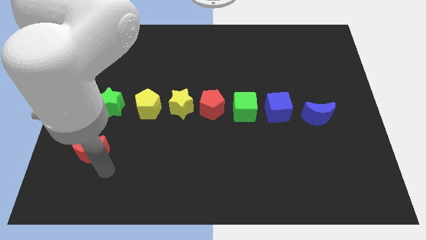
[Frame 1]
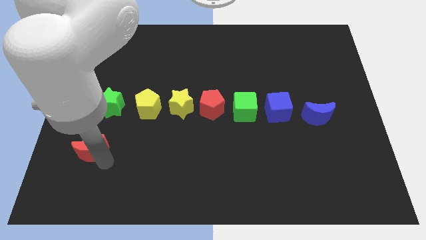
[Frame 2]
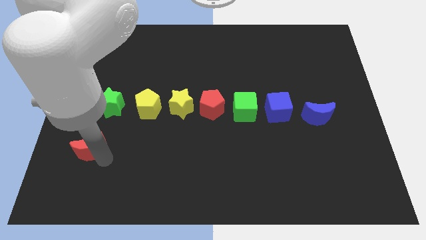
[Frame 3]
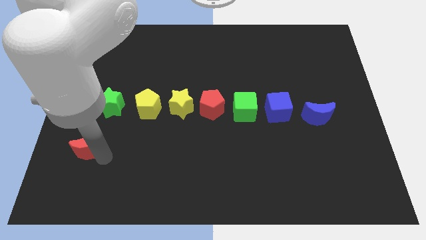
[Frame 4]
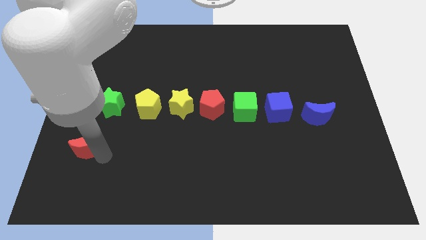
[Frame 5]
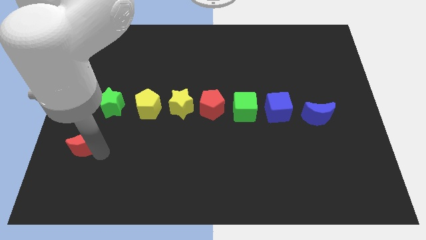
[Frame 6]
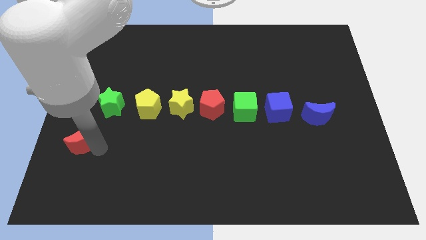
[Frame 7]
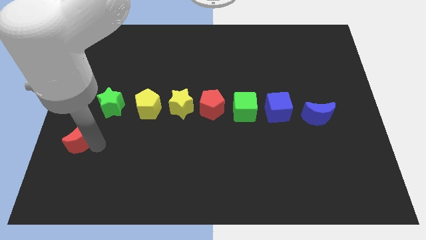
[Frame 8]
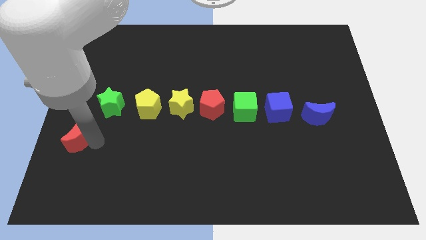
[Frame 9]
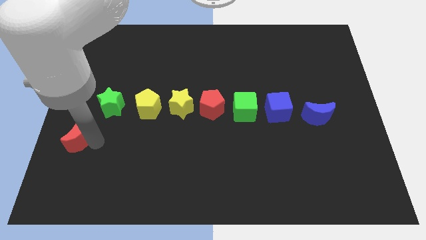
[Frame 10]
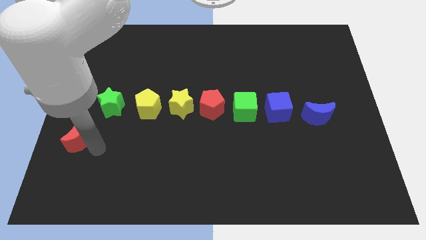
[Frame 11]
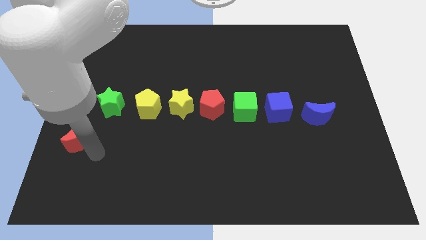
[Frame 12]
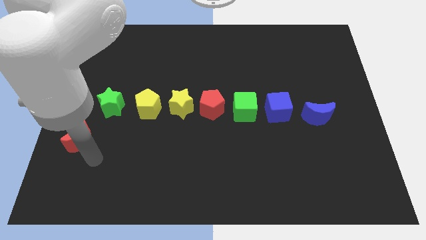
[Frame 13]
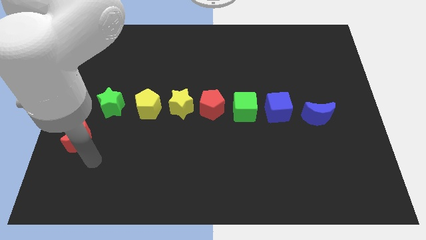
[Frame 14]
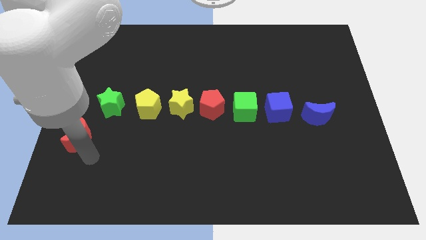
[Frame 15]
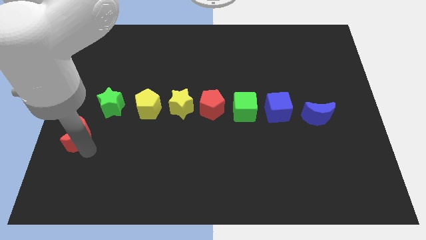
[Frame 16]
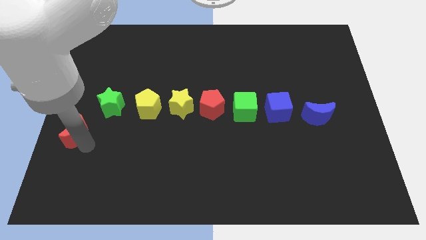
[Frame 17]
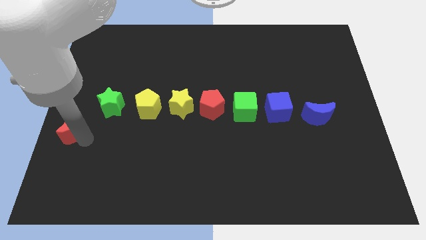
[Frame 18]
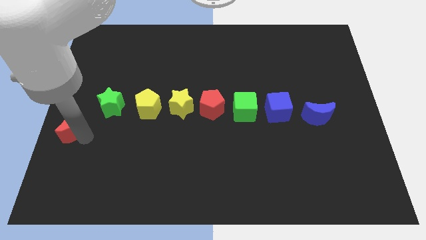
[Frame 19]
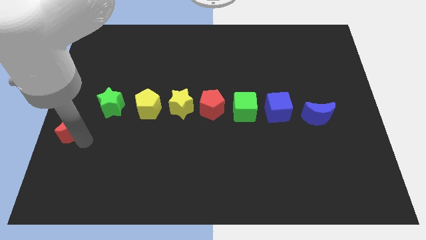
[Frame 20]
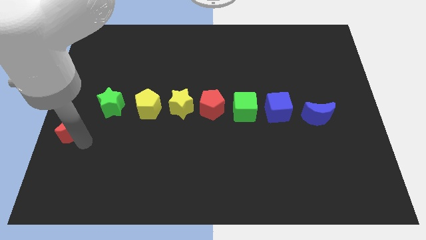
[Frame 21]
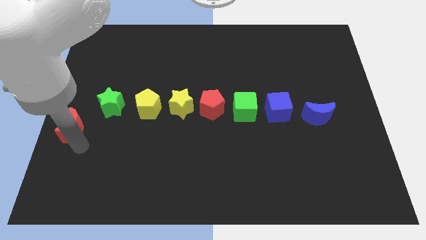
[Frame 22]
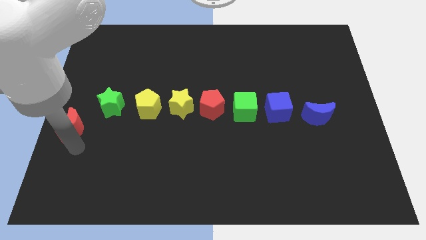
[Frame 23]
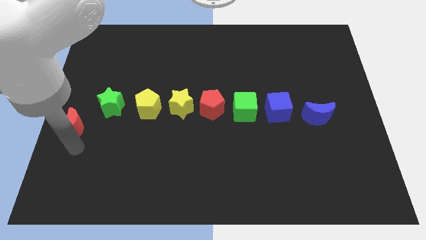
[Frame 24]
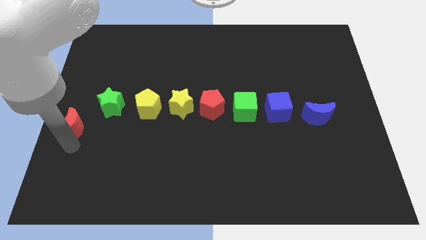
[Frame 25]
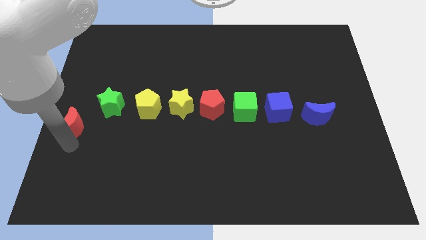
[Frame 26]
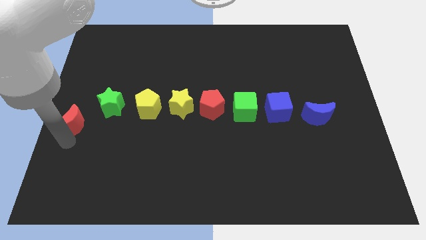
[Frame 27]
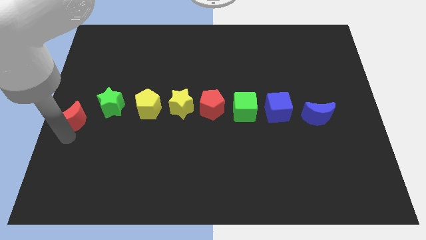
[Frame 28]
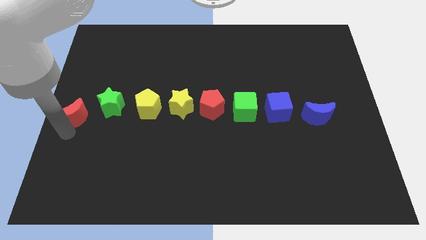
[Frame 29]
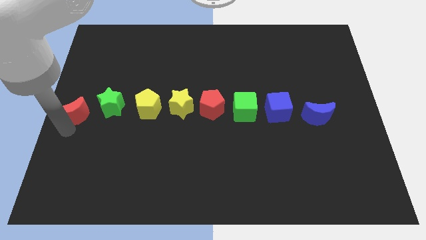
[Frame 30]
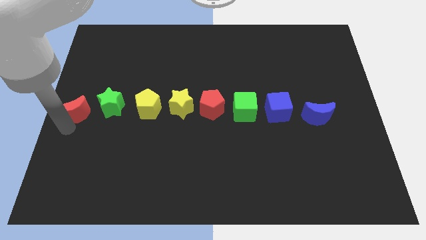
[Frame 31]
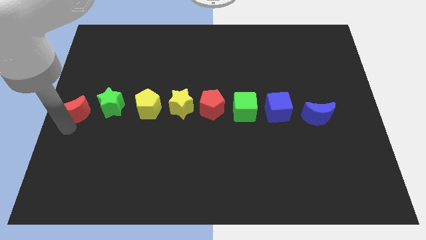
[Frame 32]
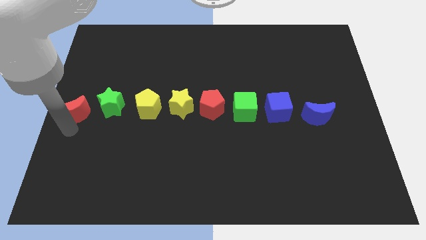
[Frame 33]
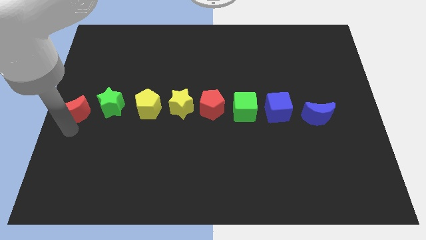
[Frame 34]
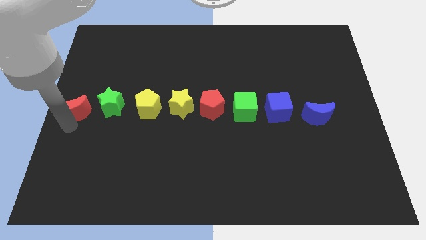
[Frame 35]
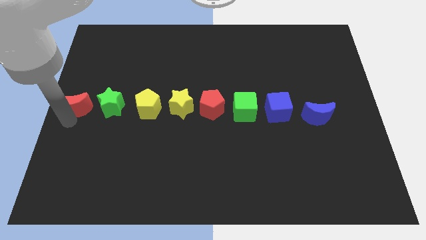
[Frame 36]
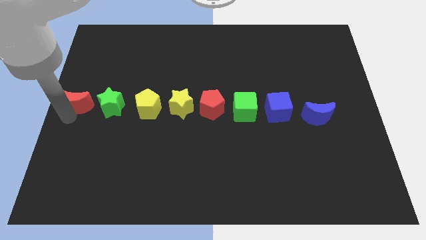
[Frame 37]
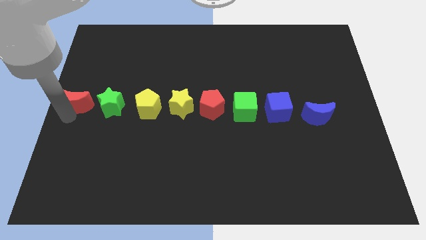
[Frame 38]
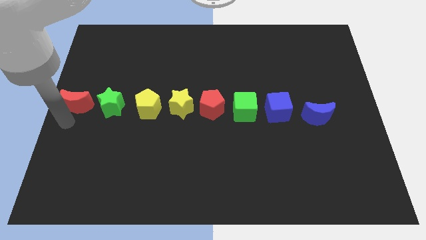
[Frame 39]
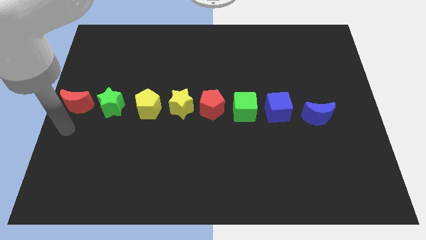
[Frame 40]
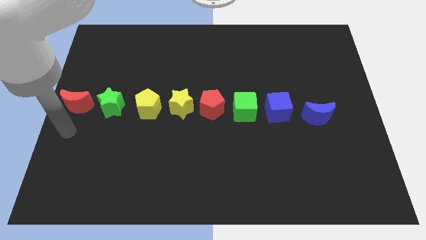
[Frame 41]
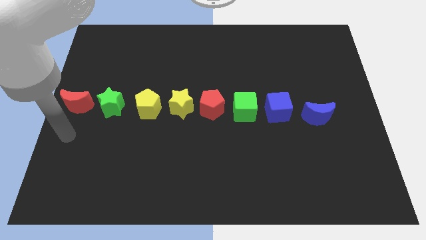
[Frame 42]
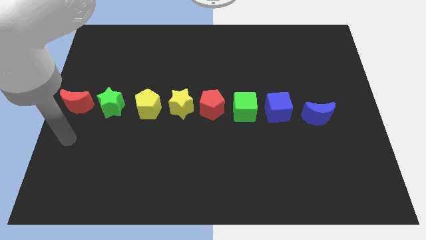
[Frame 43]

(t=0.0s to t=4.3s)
place the red moon on the left side of the green star

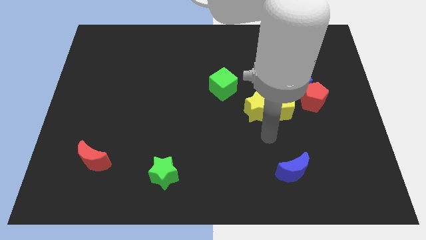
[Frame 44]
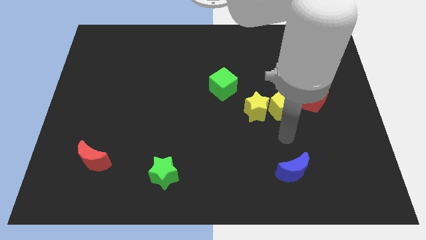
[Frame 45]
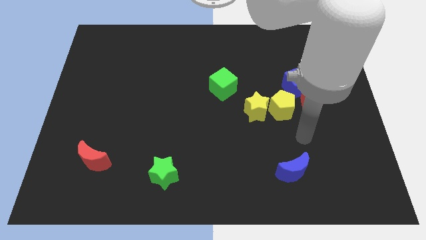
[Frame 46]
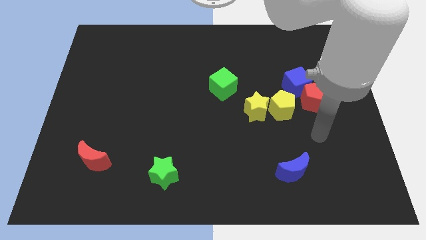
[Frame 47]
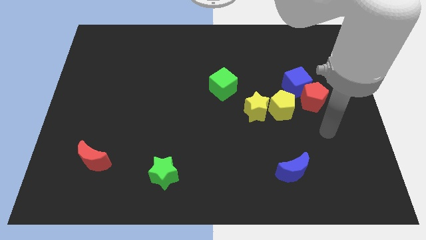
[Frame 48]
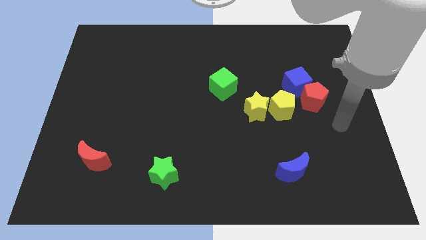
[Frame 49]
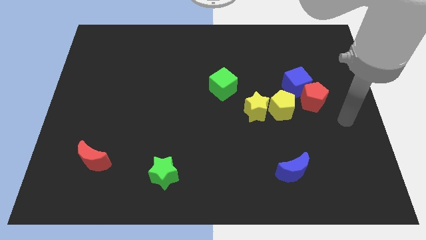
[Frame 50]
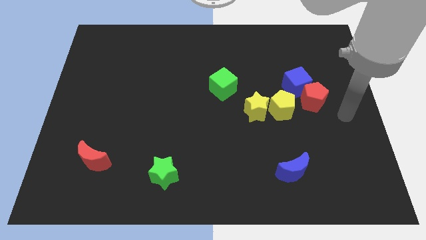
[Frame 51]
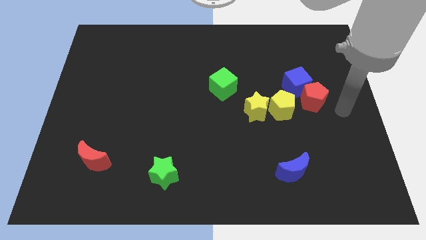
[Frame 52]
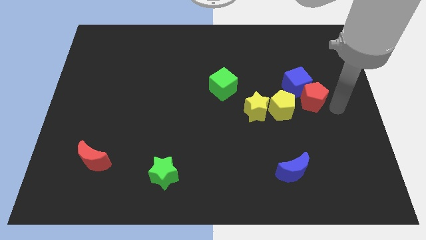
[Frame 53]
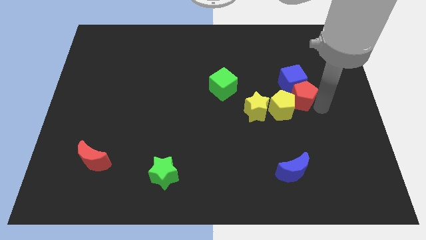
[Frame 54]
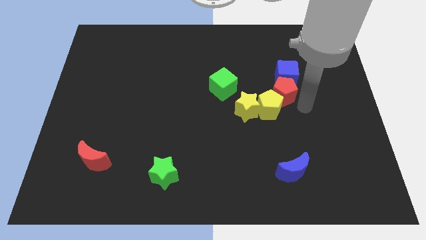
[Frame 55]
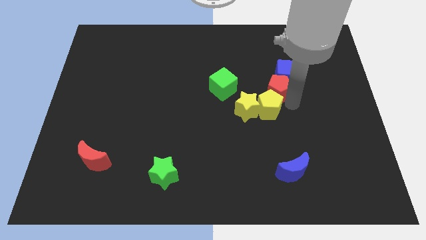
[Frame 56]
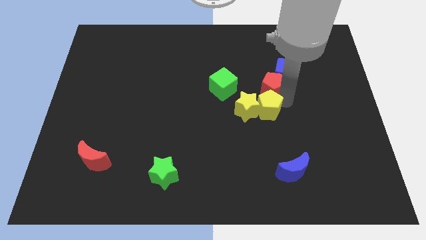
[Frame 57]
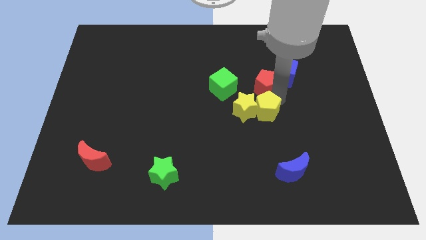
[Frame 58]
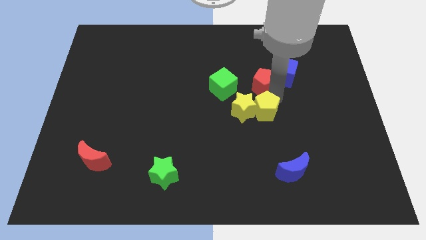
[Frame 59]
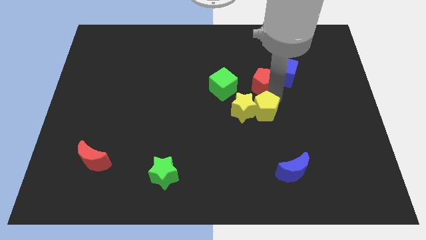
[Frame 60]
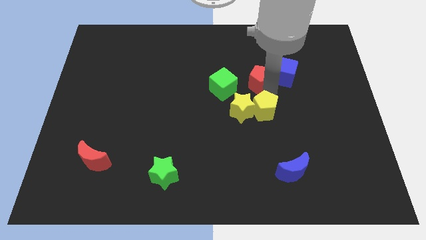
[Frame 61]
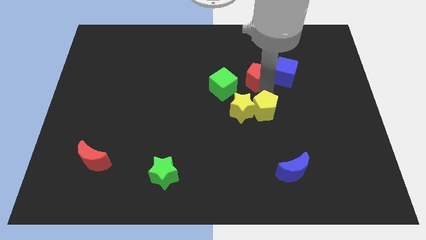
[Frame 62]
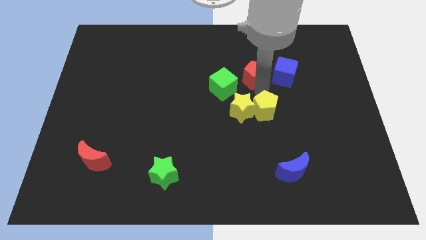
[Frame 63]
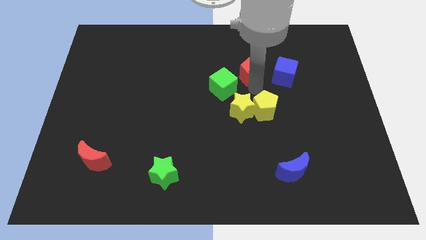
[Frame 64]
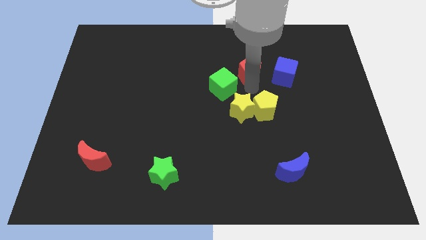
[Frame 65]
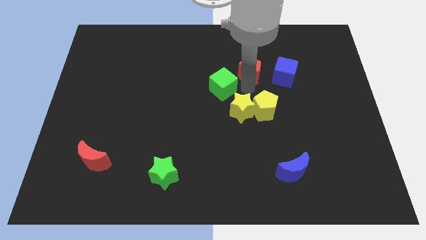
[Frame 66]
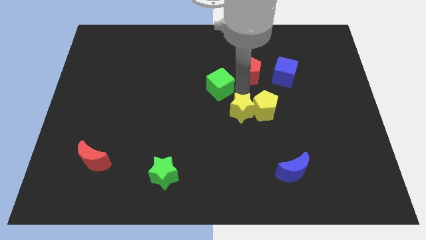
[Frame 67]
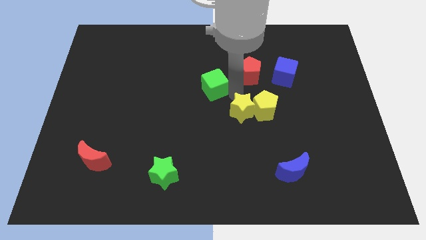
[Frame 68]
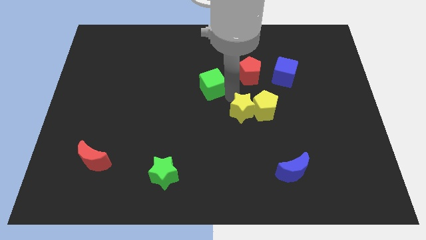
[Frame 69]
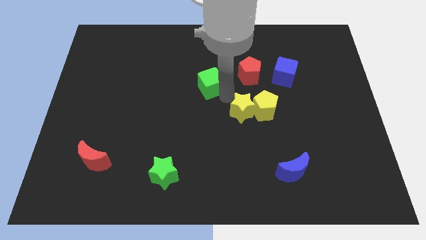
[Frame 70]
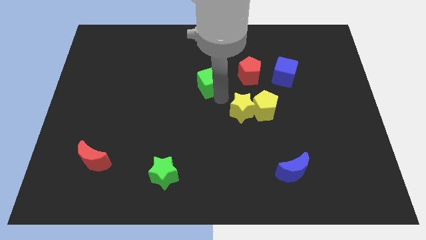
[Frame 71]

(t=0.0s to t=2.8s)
push the red pentagon into the group of blocks

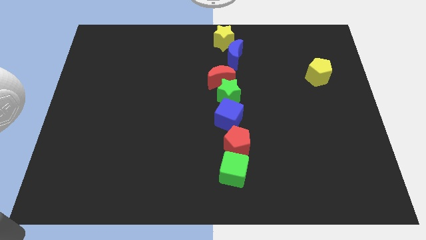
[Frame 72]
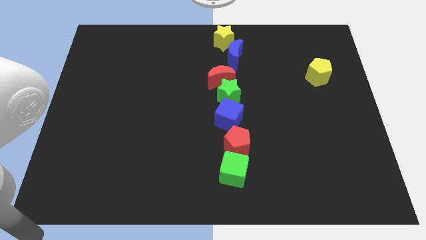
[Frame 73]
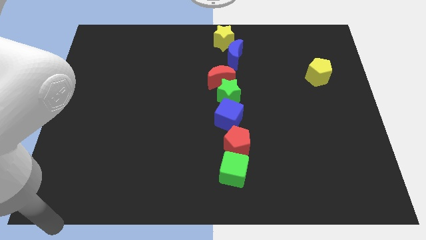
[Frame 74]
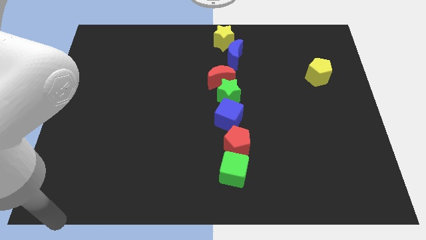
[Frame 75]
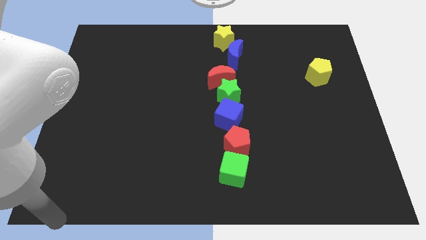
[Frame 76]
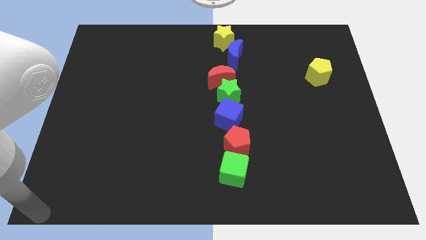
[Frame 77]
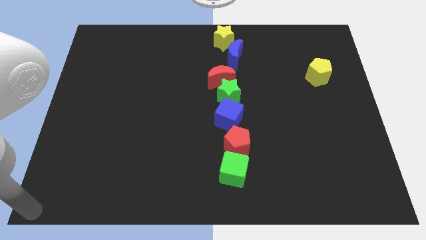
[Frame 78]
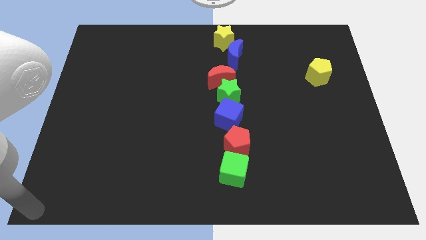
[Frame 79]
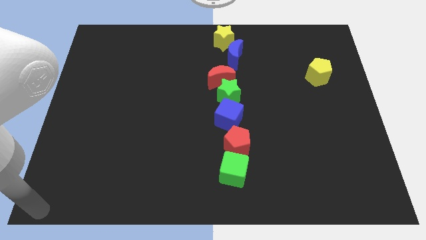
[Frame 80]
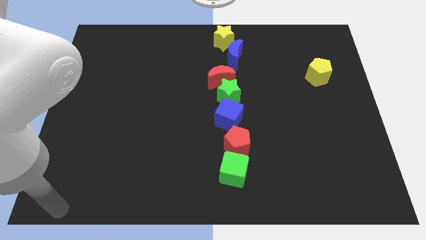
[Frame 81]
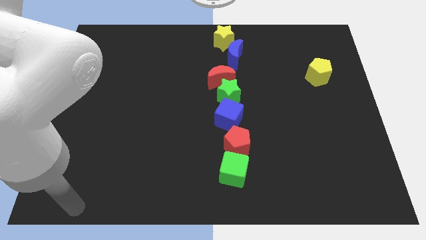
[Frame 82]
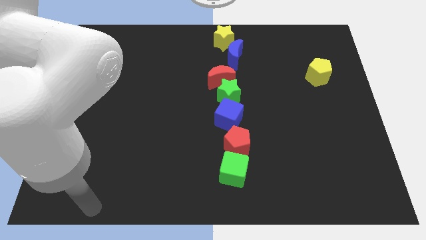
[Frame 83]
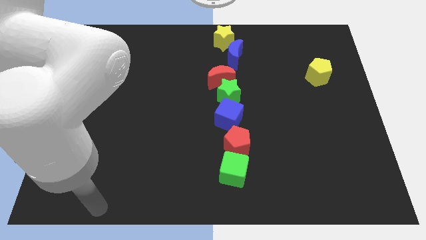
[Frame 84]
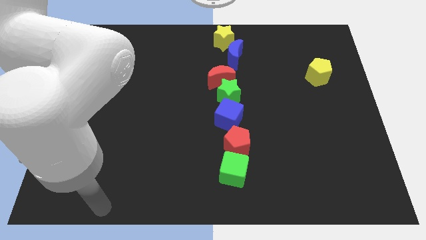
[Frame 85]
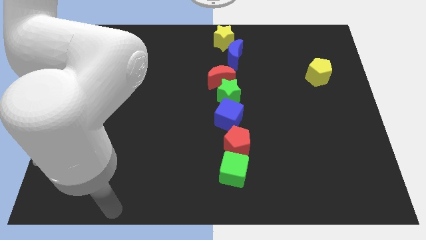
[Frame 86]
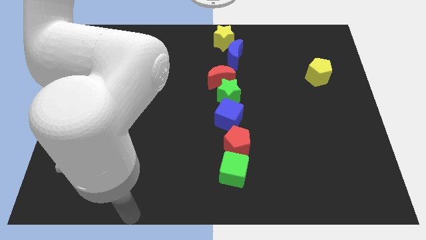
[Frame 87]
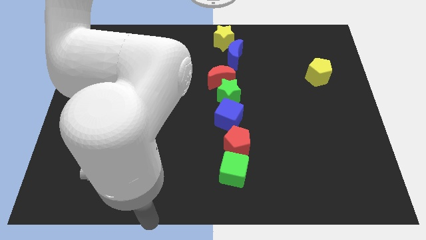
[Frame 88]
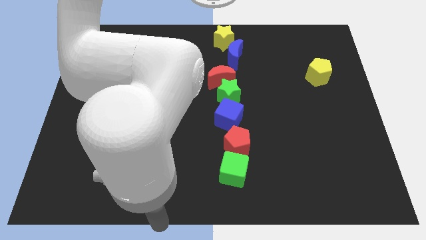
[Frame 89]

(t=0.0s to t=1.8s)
move your arm towards the green cube
